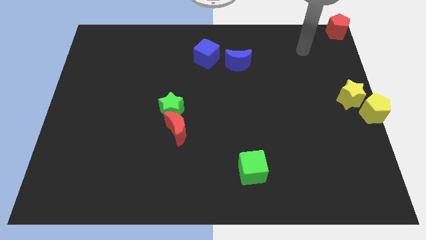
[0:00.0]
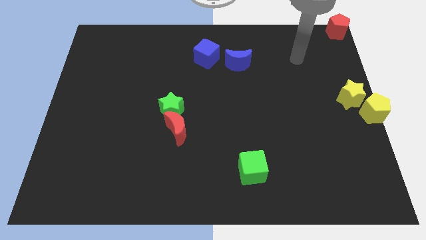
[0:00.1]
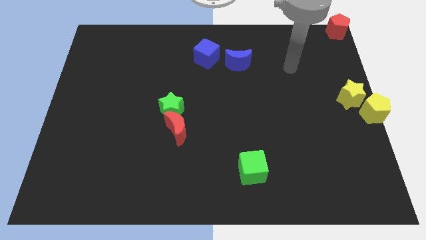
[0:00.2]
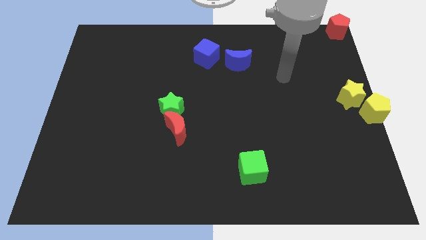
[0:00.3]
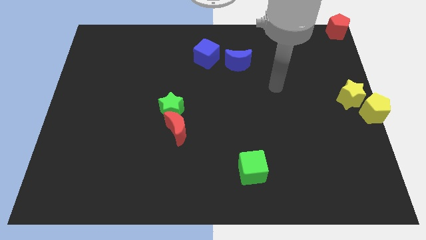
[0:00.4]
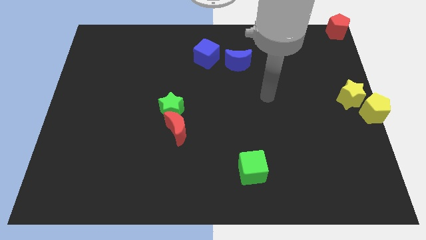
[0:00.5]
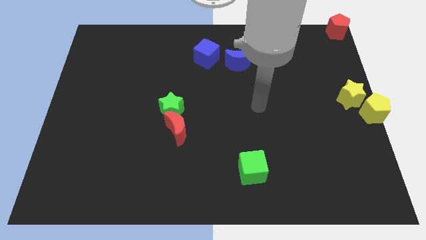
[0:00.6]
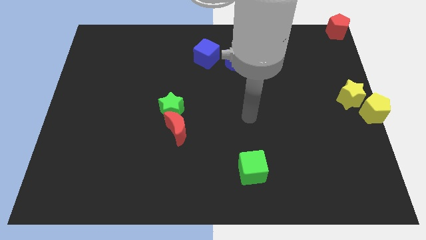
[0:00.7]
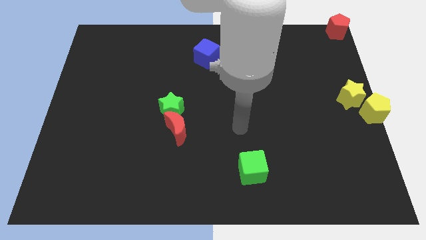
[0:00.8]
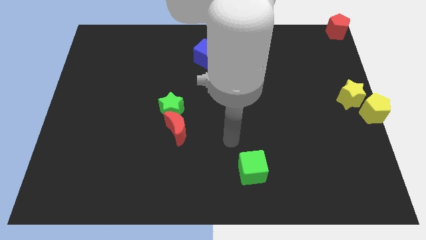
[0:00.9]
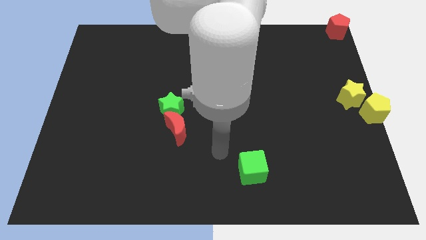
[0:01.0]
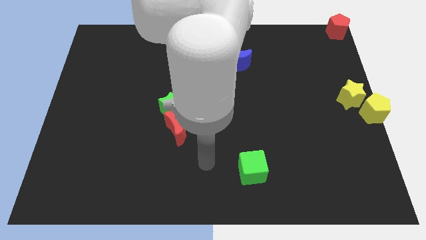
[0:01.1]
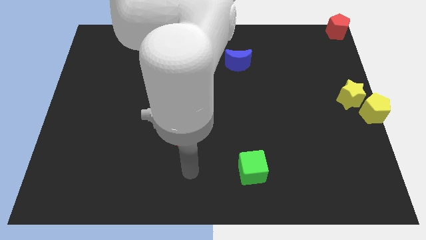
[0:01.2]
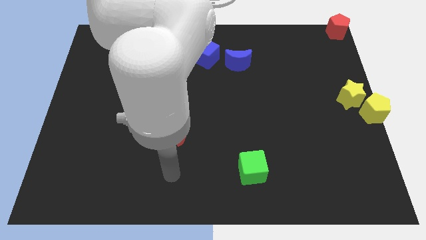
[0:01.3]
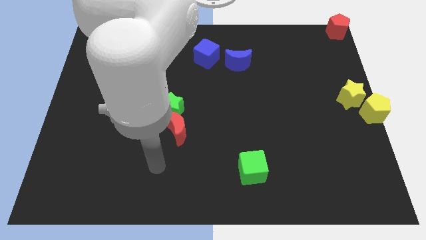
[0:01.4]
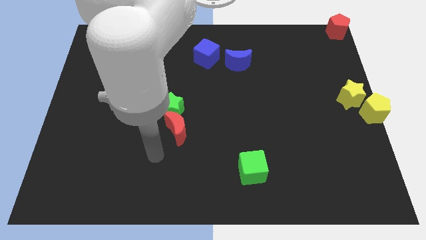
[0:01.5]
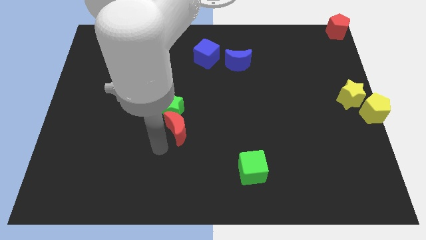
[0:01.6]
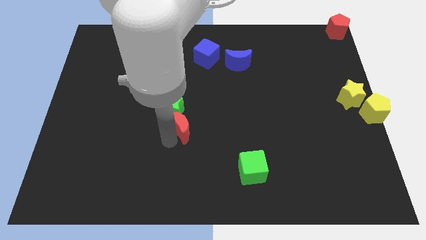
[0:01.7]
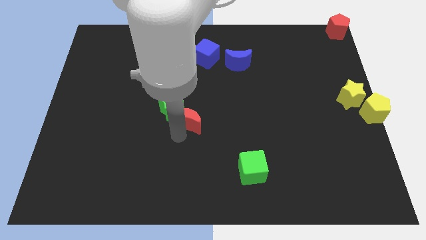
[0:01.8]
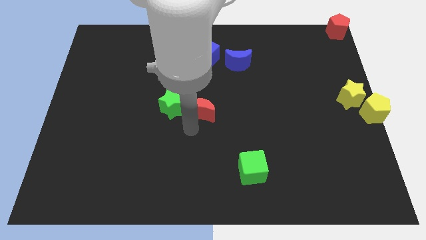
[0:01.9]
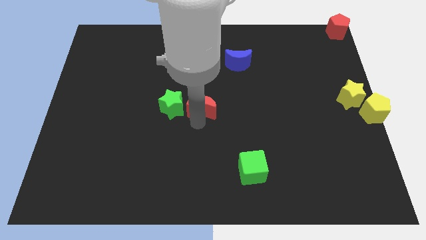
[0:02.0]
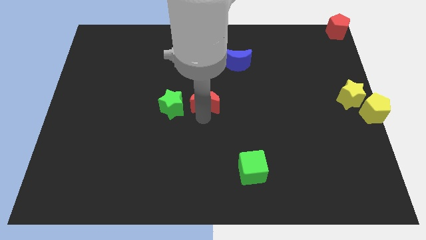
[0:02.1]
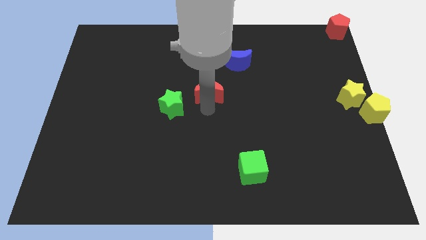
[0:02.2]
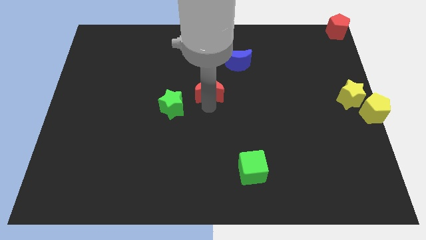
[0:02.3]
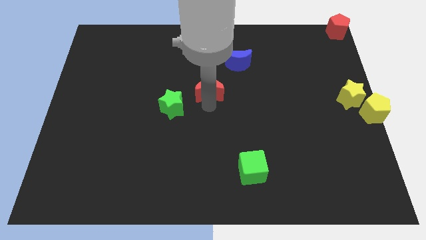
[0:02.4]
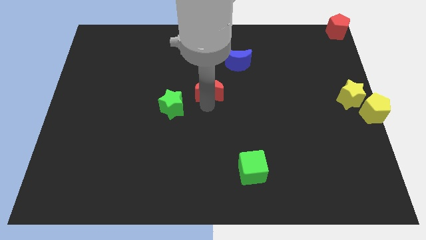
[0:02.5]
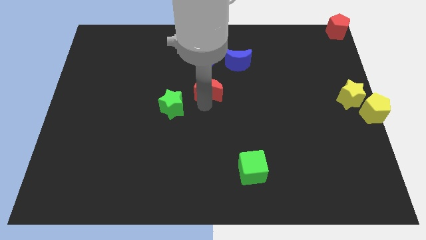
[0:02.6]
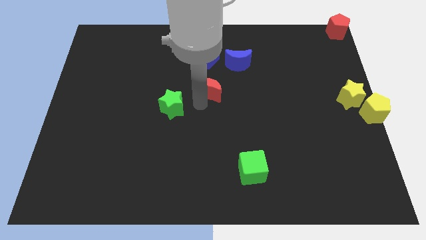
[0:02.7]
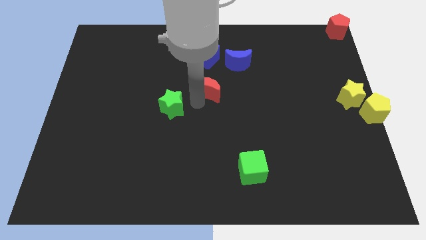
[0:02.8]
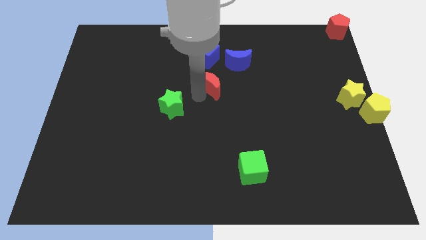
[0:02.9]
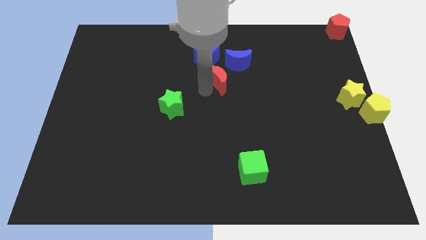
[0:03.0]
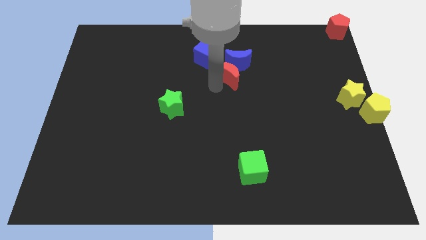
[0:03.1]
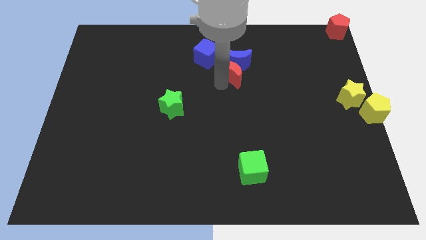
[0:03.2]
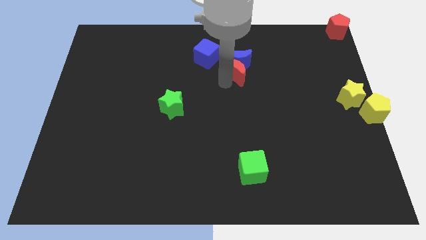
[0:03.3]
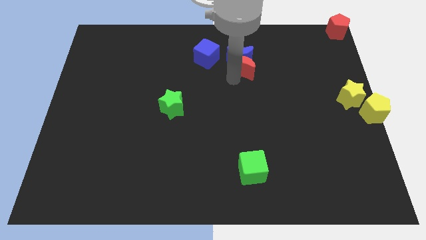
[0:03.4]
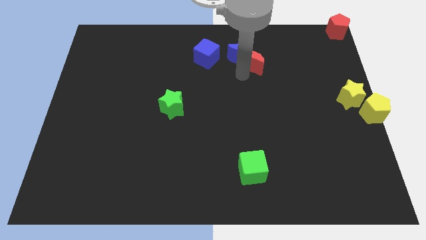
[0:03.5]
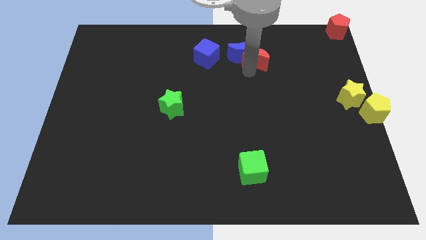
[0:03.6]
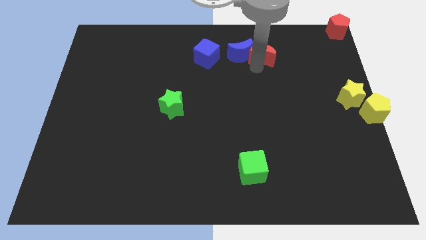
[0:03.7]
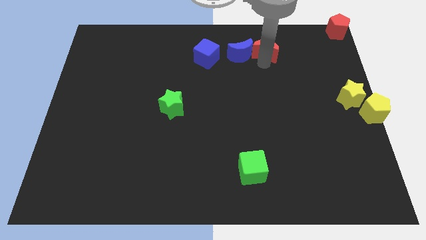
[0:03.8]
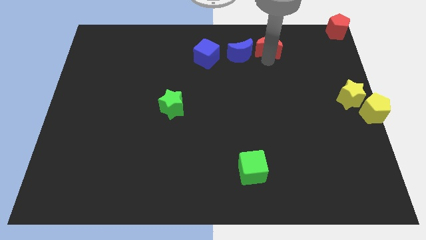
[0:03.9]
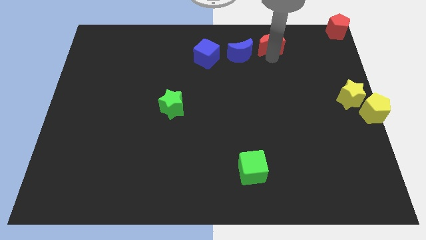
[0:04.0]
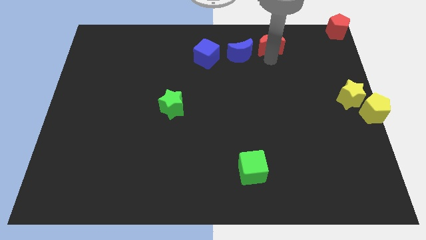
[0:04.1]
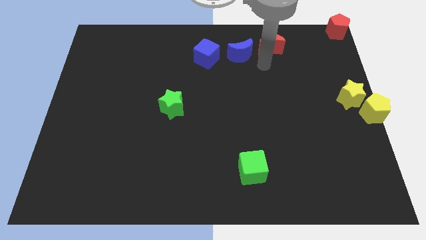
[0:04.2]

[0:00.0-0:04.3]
put the red crescent on the right side of the blue crescent

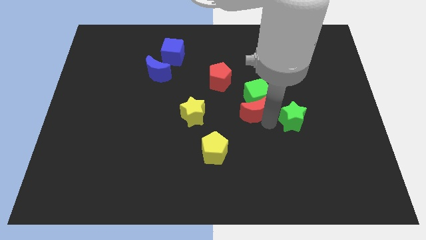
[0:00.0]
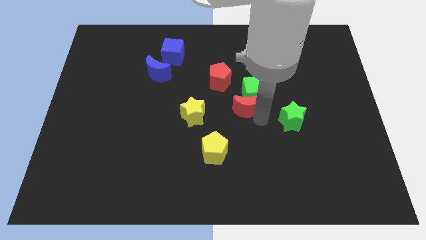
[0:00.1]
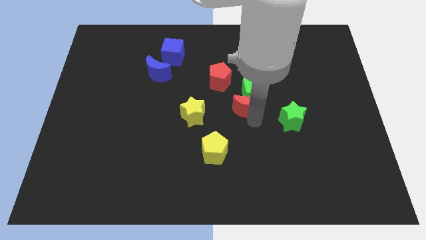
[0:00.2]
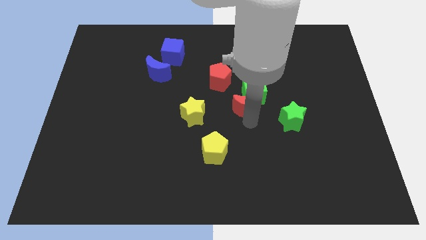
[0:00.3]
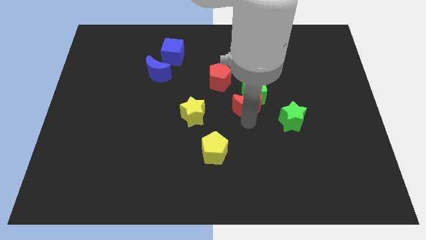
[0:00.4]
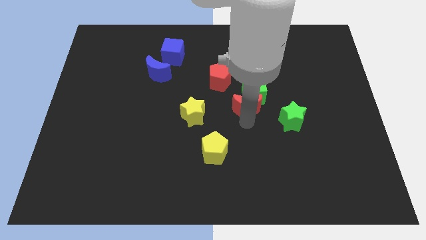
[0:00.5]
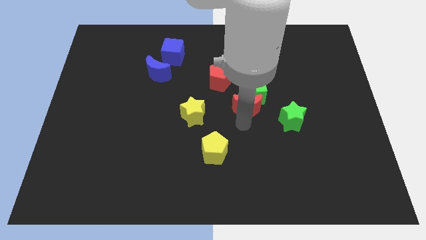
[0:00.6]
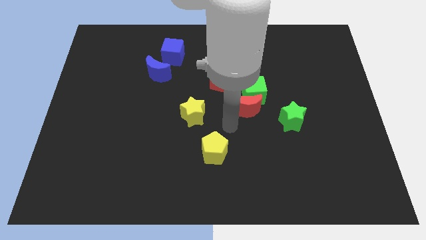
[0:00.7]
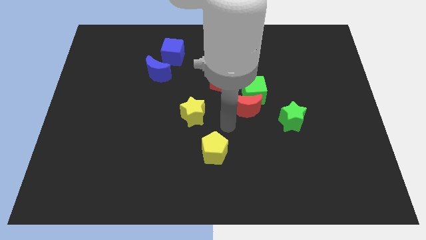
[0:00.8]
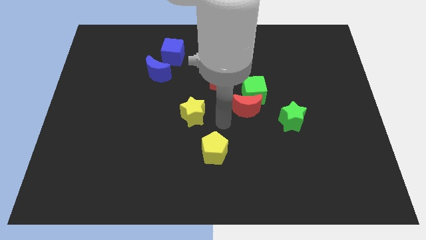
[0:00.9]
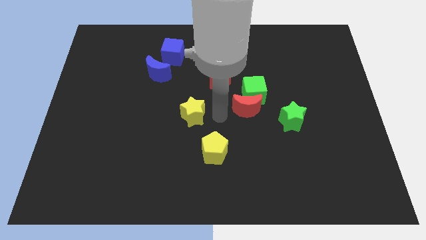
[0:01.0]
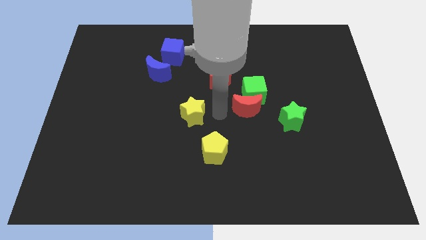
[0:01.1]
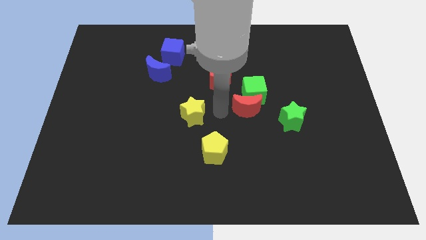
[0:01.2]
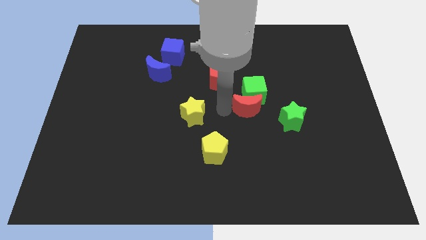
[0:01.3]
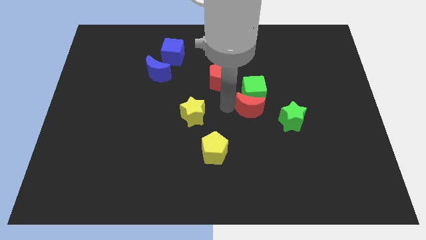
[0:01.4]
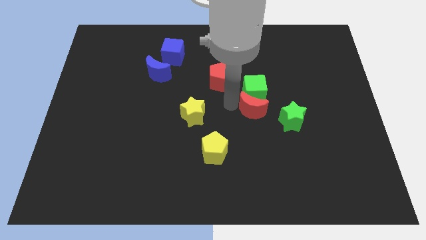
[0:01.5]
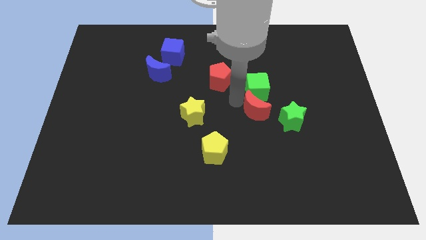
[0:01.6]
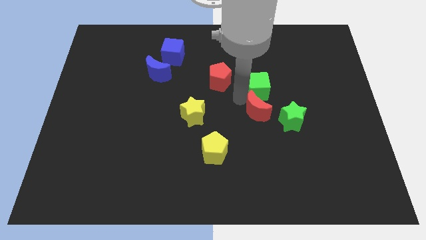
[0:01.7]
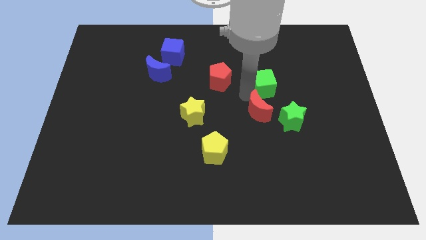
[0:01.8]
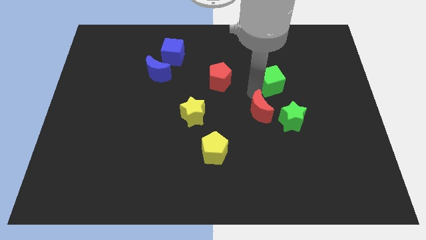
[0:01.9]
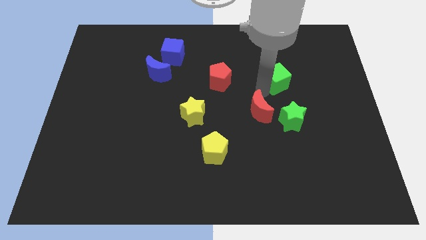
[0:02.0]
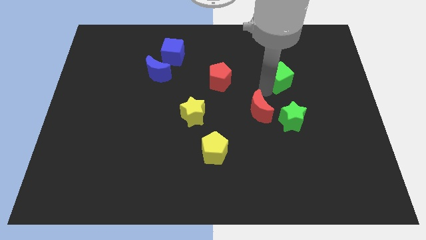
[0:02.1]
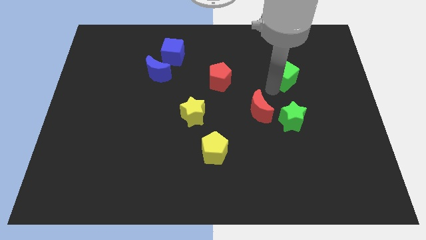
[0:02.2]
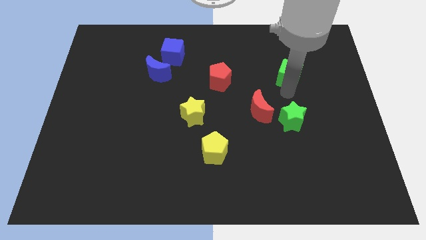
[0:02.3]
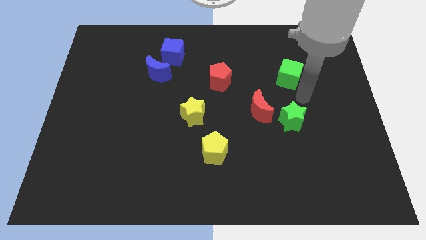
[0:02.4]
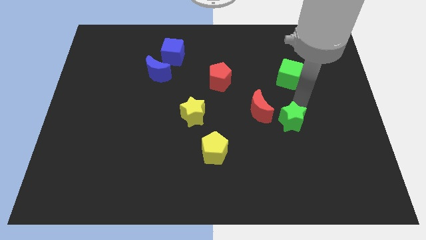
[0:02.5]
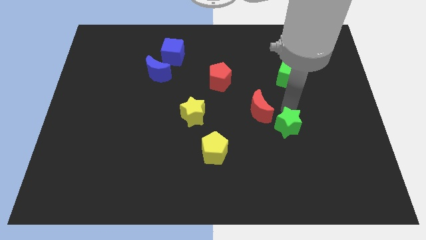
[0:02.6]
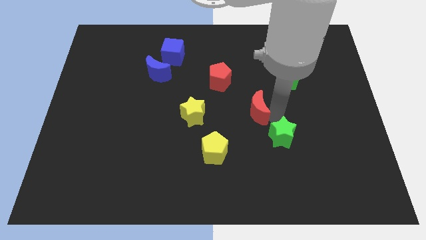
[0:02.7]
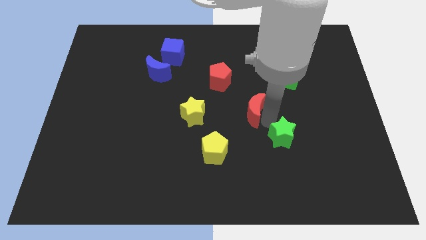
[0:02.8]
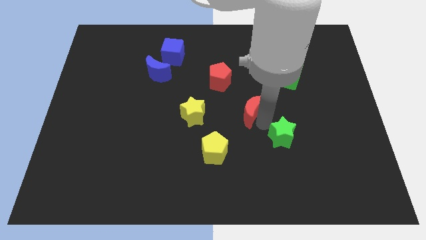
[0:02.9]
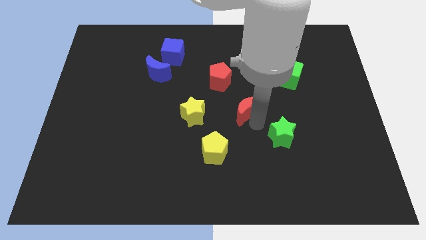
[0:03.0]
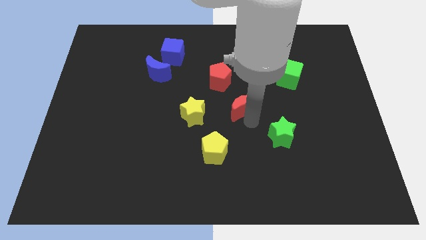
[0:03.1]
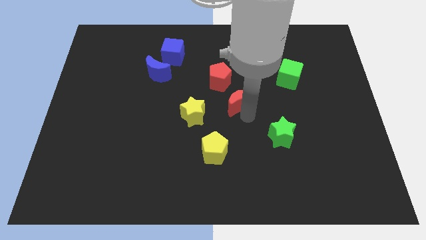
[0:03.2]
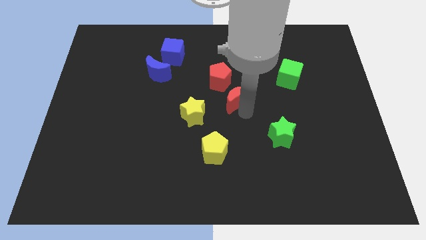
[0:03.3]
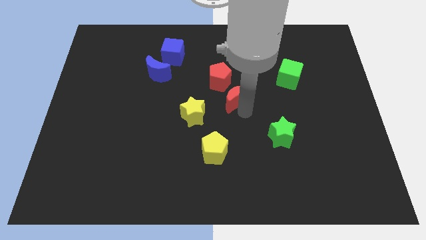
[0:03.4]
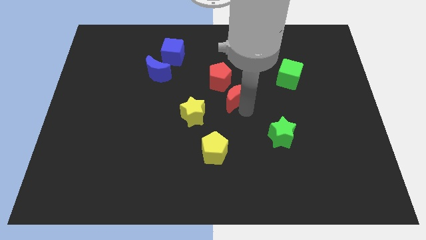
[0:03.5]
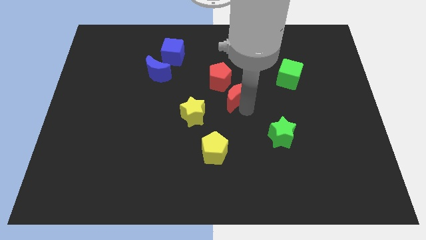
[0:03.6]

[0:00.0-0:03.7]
separate the red crescent and green cube

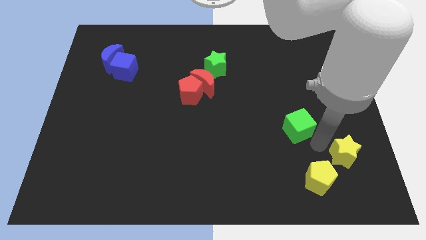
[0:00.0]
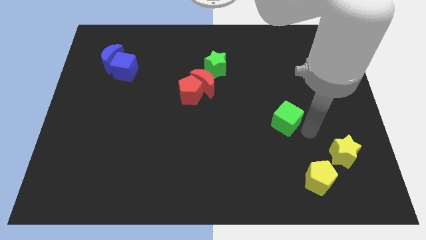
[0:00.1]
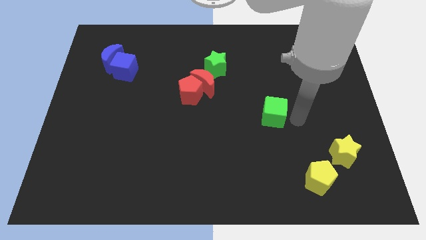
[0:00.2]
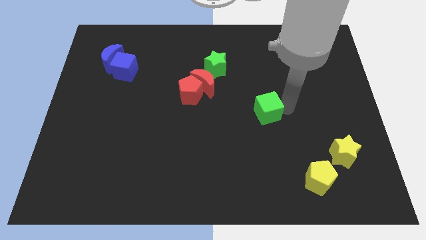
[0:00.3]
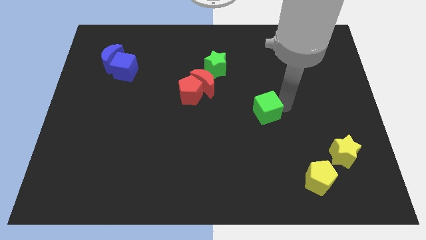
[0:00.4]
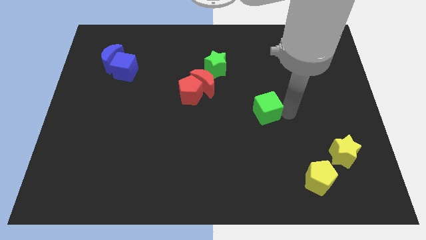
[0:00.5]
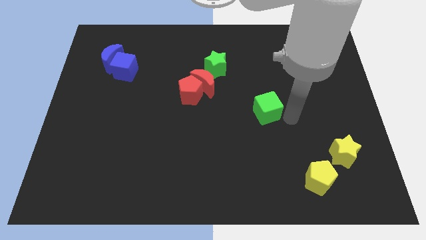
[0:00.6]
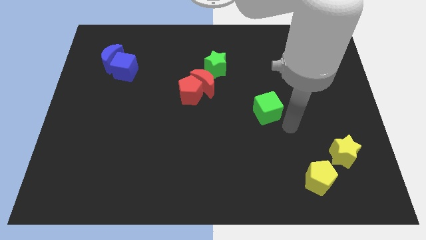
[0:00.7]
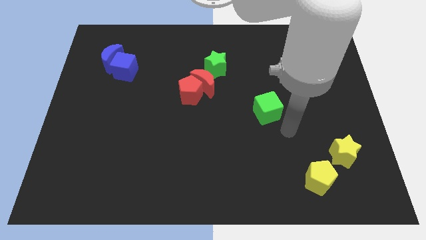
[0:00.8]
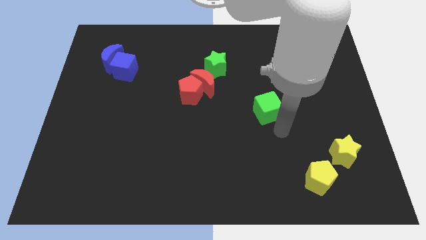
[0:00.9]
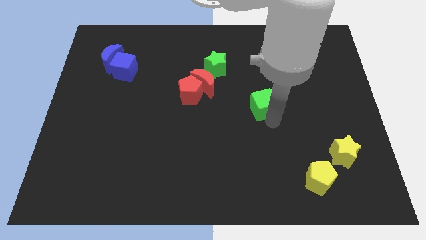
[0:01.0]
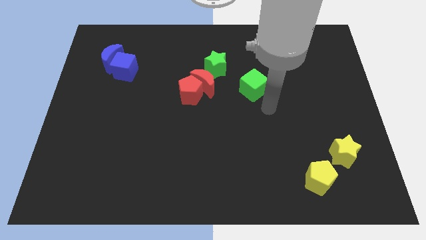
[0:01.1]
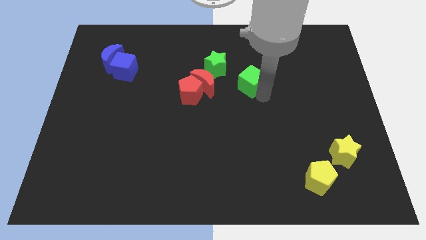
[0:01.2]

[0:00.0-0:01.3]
push the green cube to the right of the red crescent
